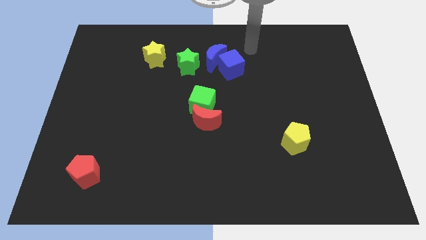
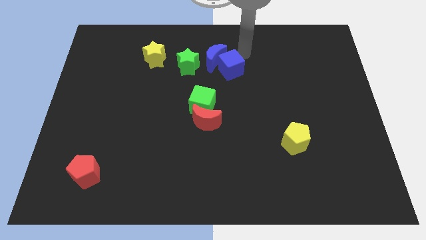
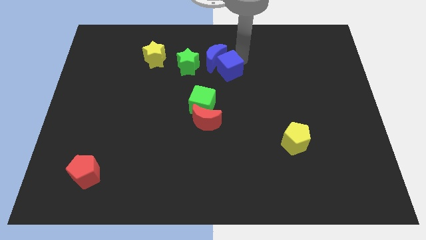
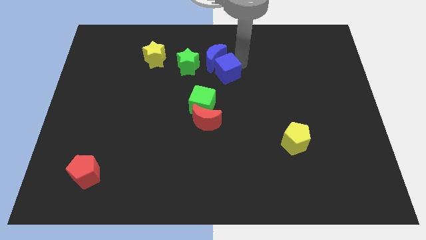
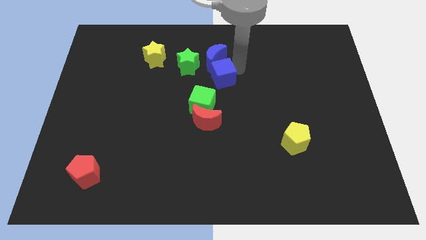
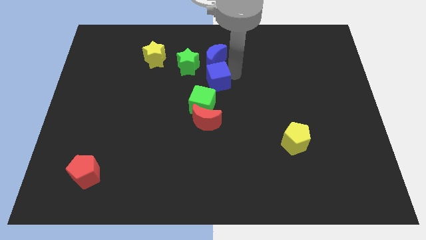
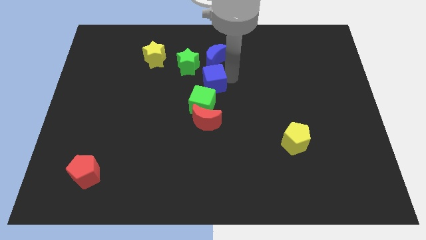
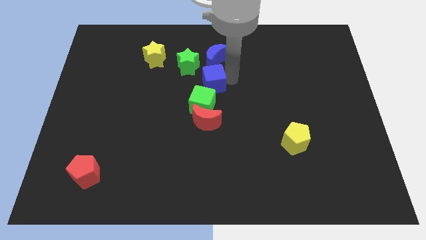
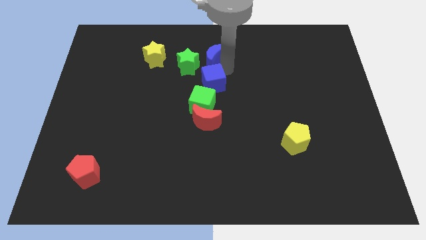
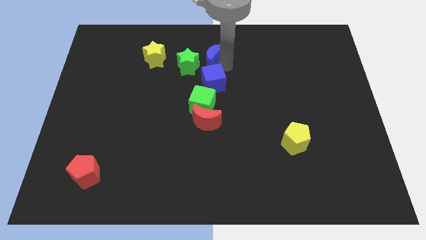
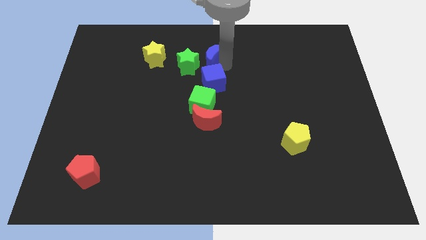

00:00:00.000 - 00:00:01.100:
separate the blue cube and blue crescent

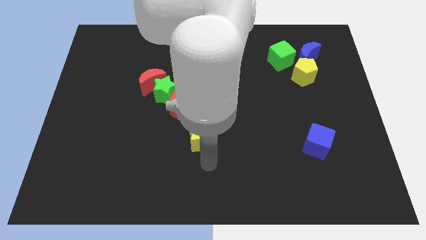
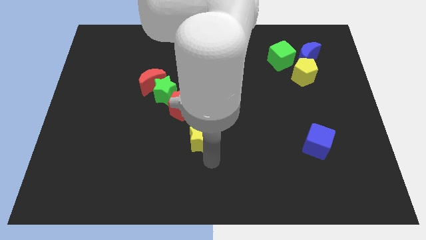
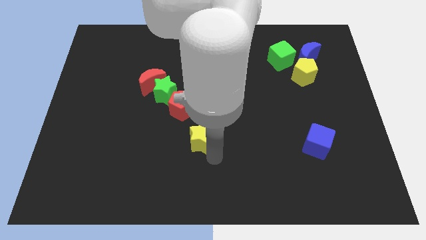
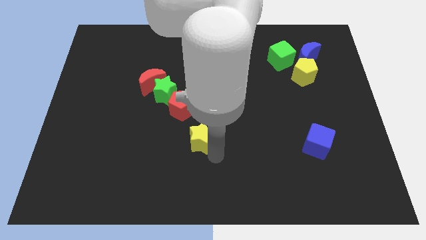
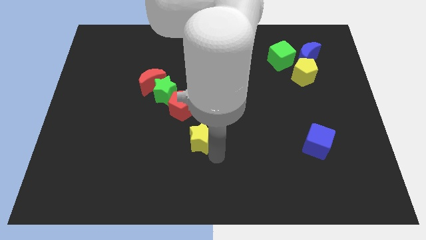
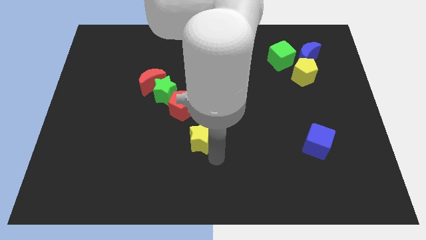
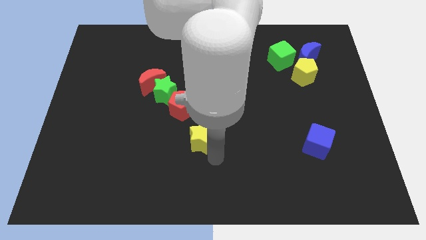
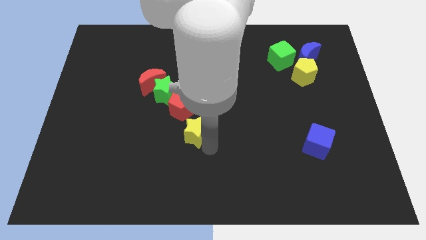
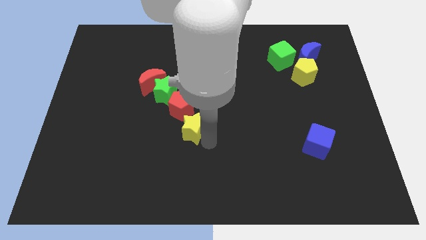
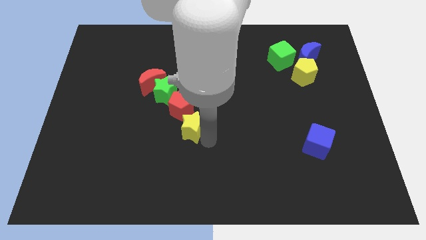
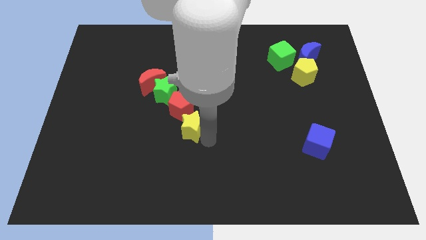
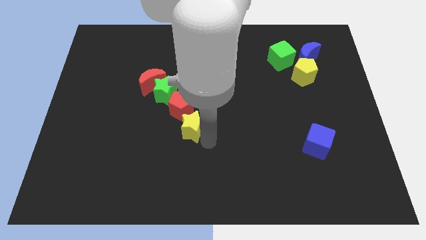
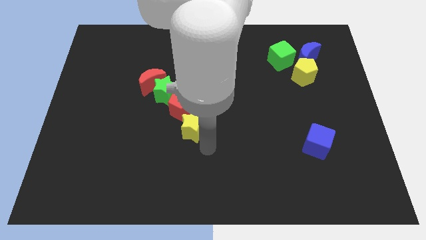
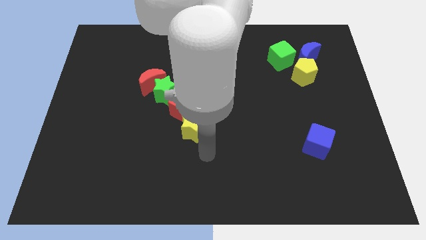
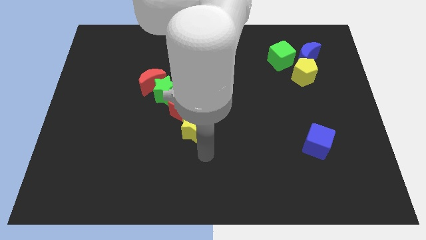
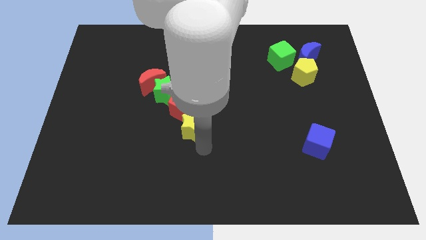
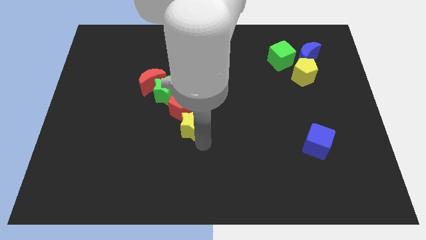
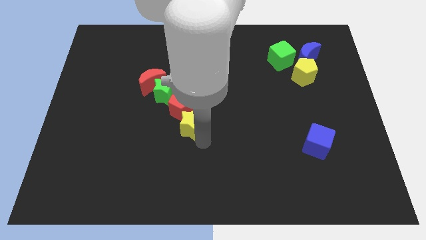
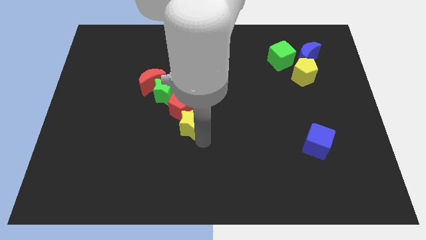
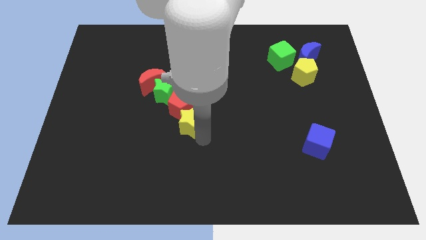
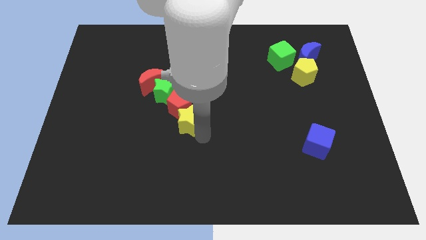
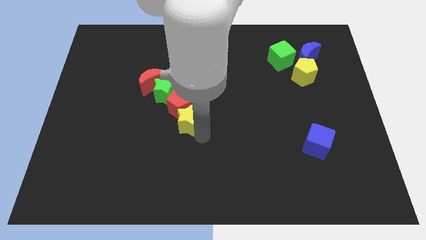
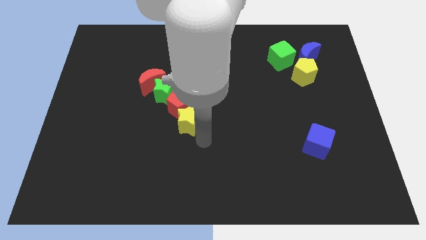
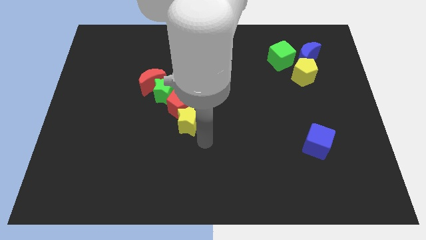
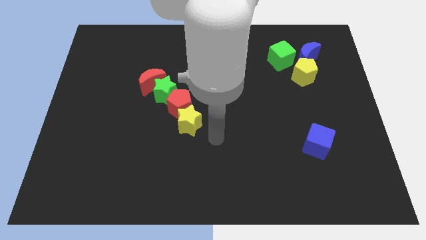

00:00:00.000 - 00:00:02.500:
push the yellow star into the red pentagon

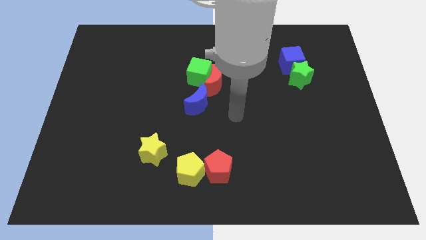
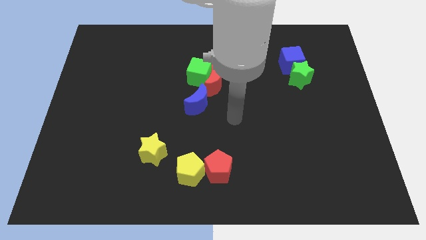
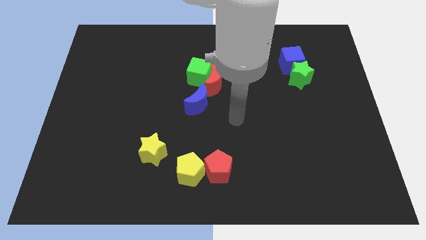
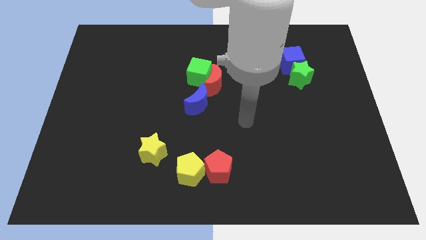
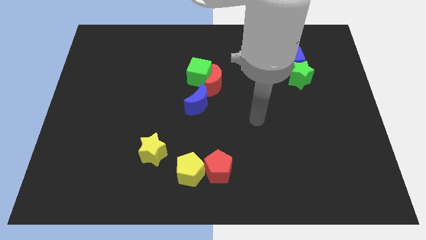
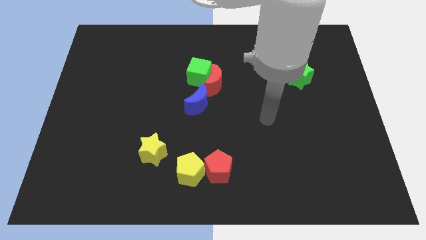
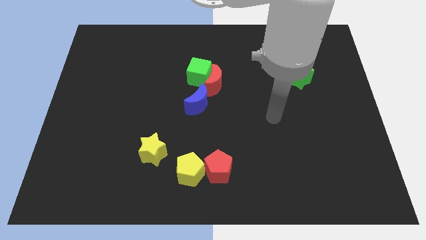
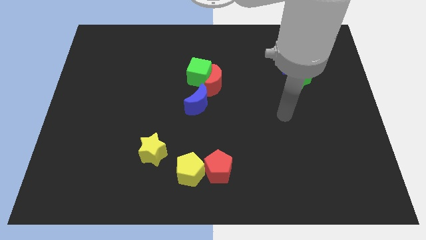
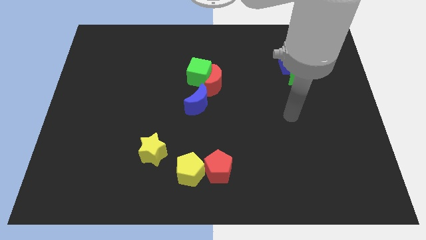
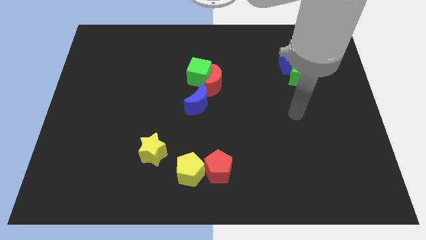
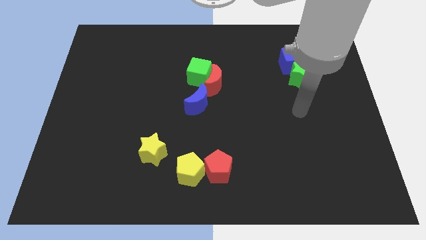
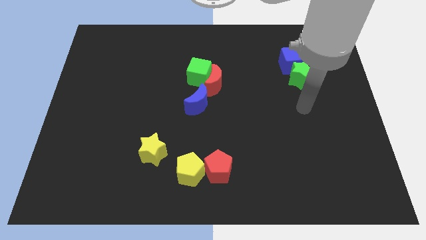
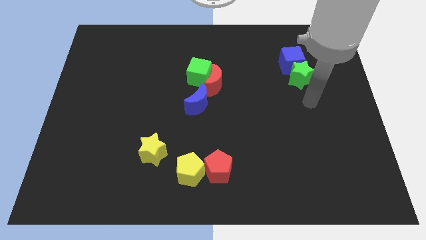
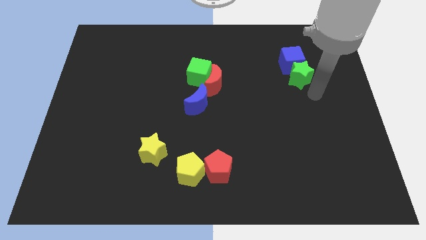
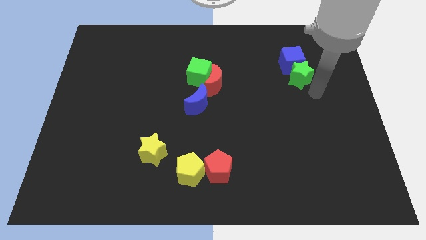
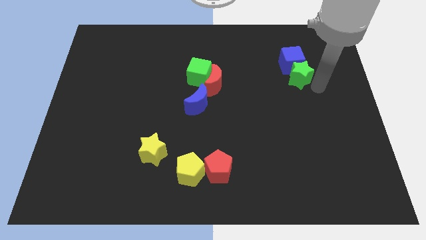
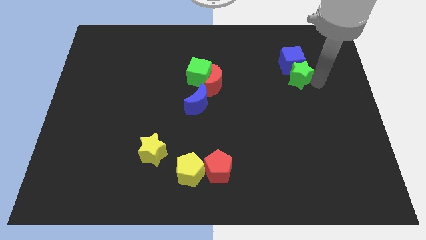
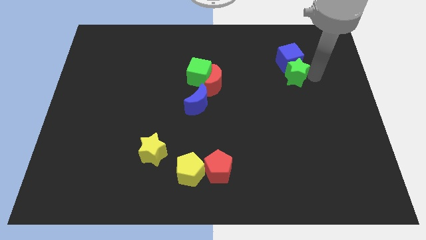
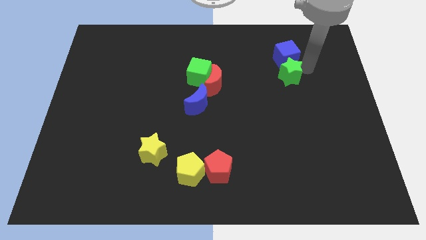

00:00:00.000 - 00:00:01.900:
touch the green star

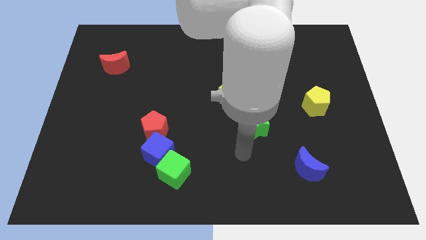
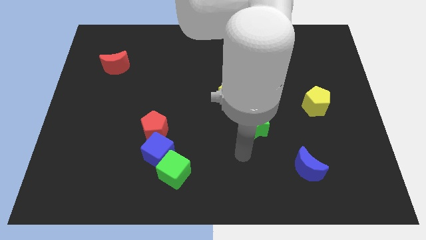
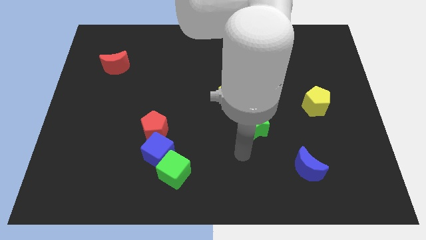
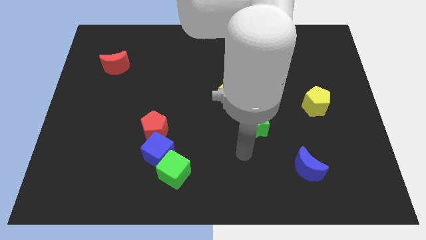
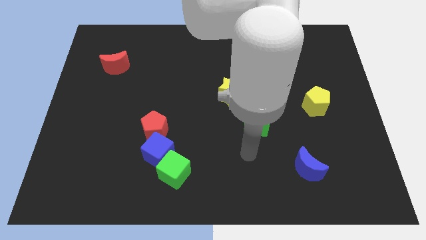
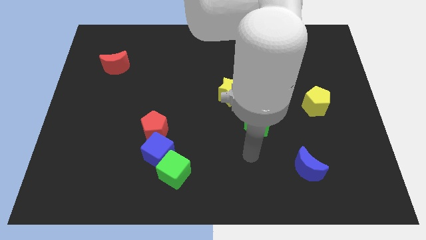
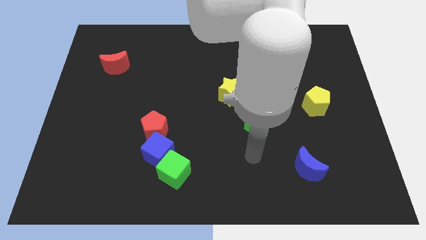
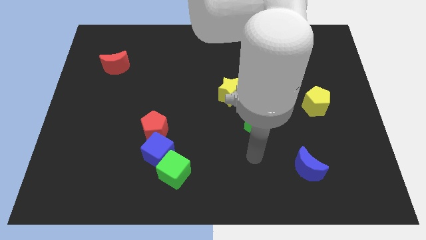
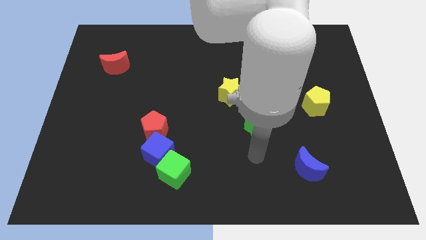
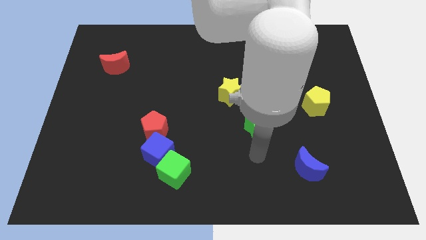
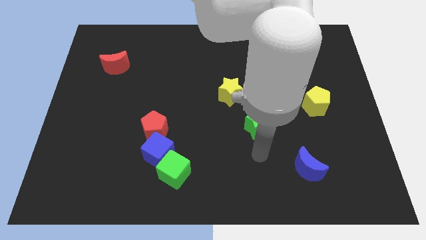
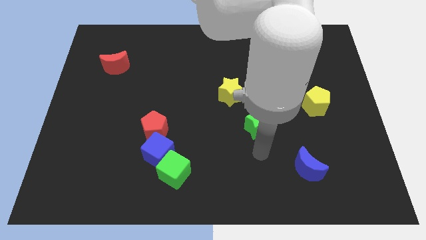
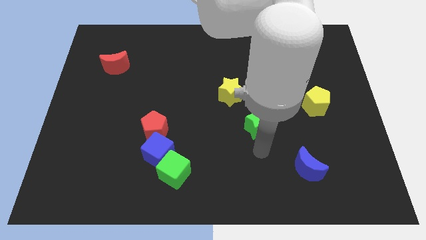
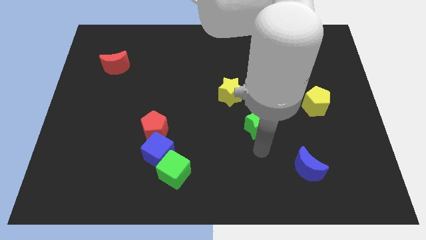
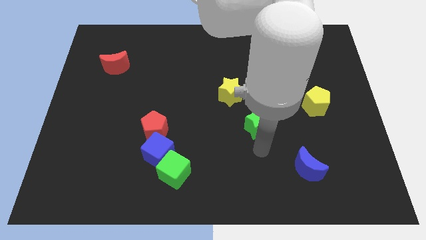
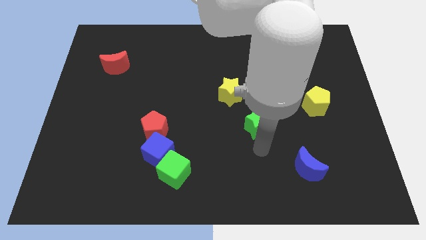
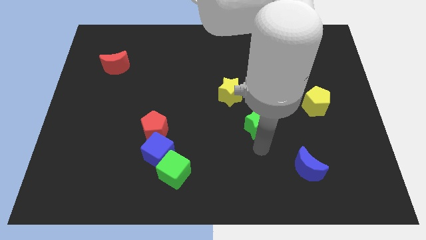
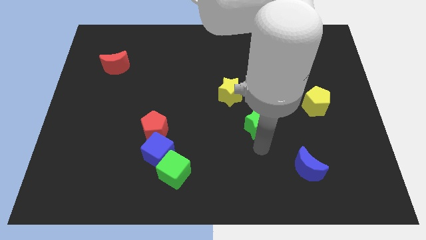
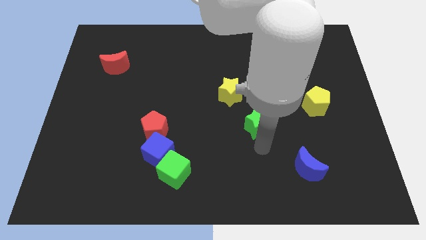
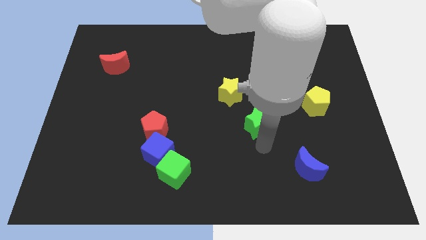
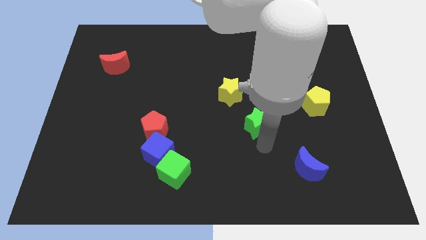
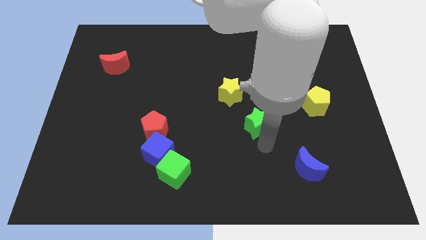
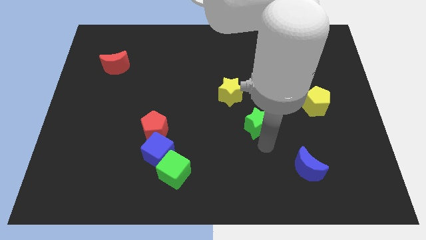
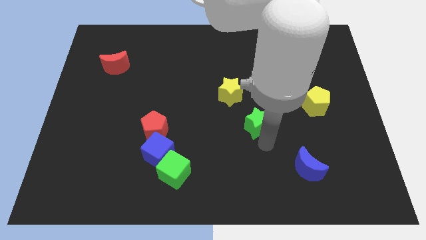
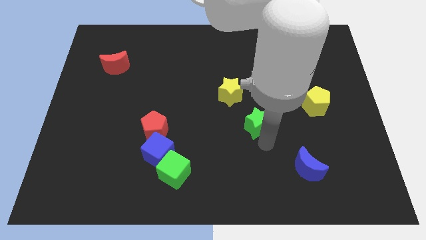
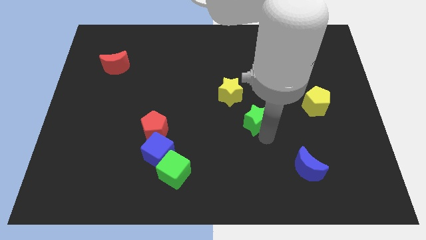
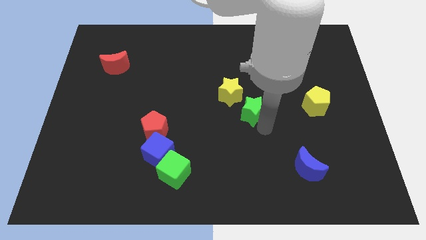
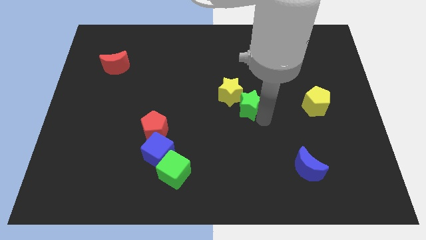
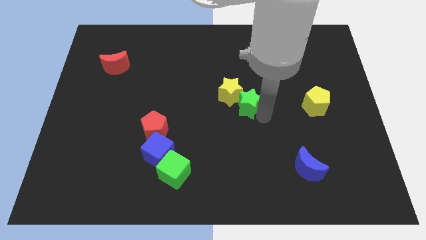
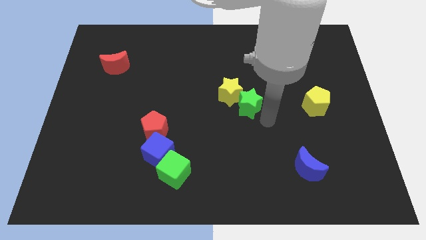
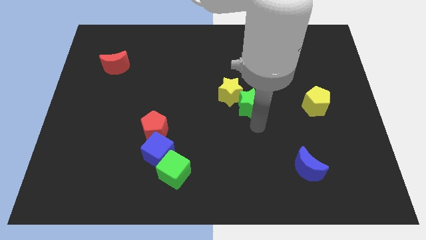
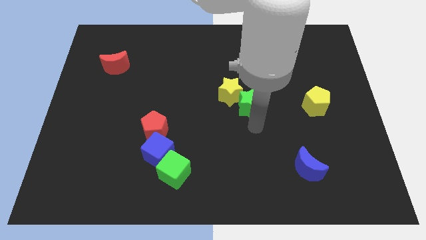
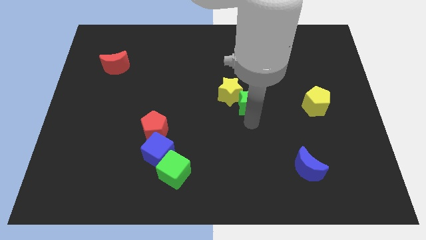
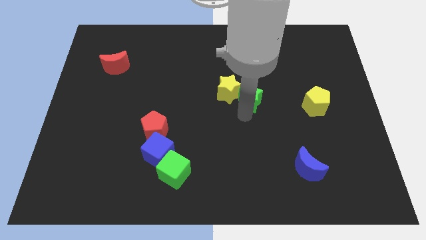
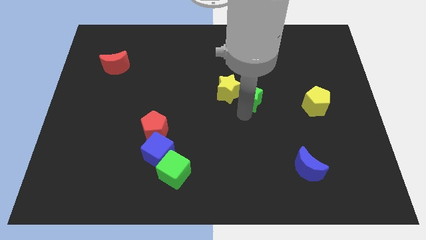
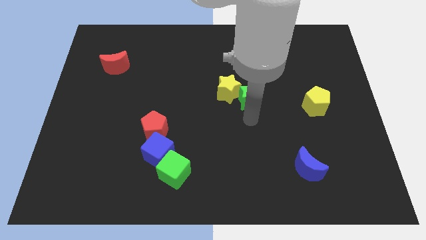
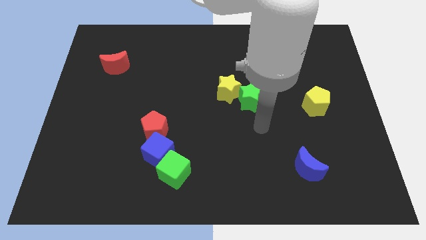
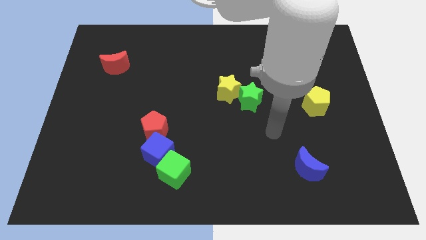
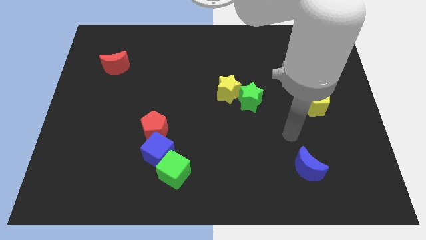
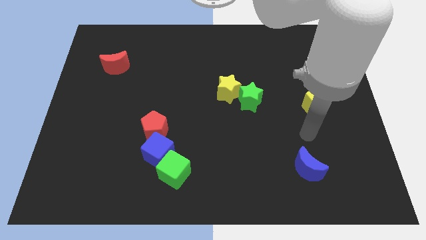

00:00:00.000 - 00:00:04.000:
move the green star into the yellow star
